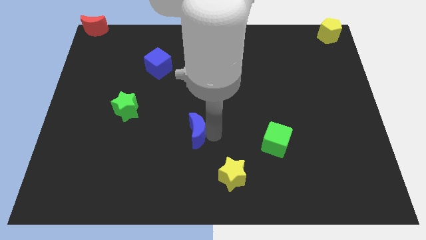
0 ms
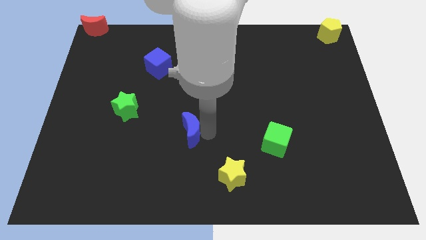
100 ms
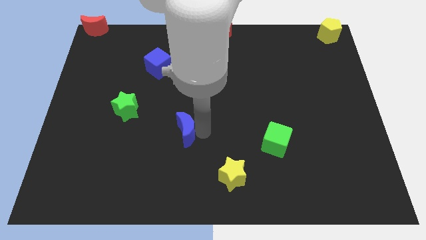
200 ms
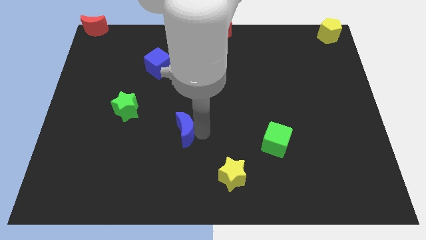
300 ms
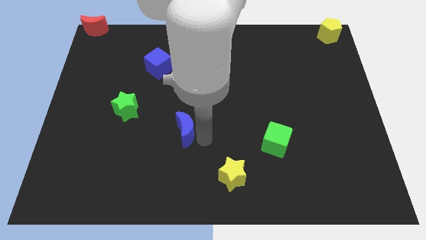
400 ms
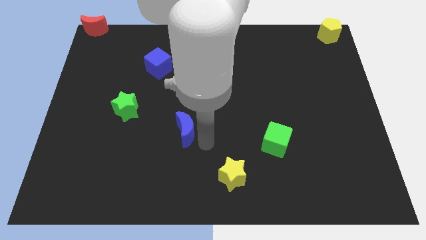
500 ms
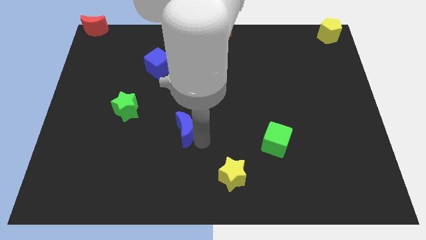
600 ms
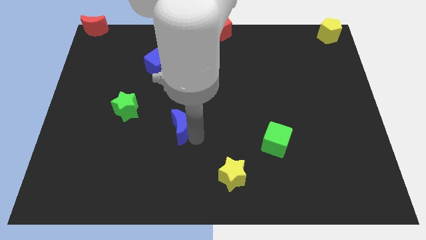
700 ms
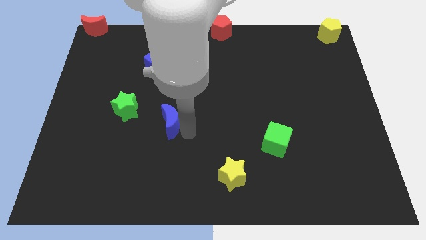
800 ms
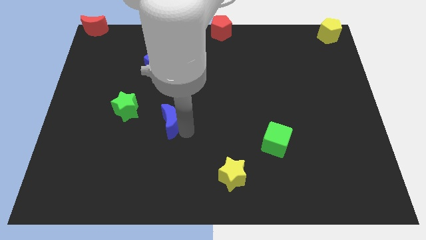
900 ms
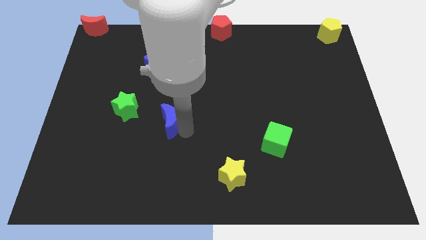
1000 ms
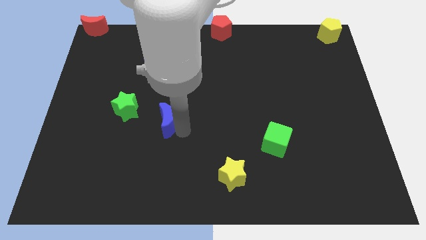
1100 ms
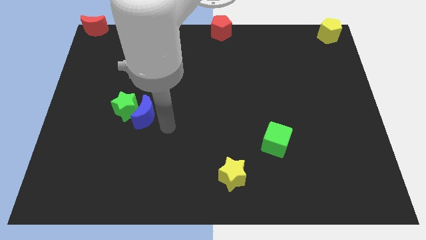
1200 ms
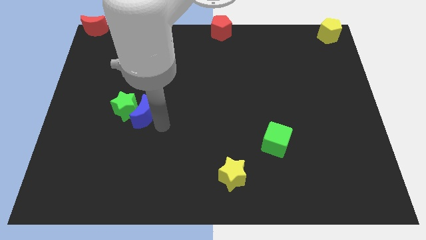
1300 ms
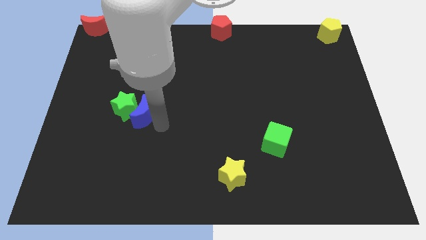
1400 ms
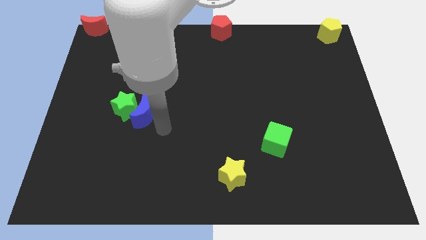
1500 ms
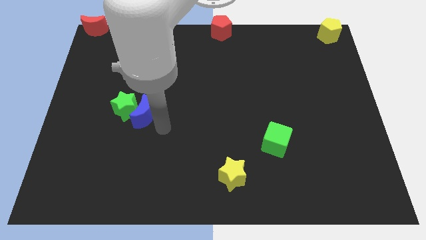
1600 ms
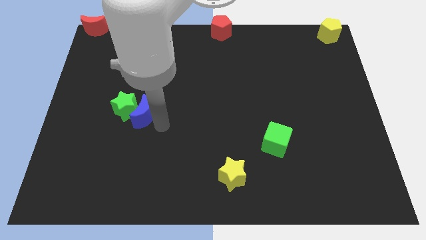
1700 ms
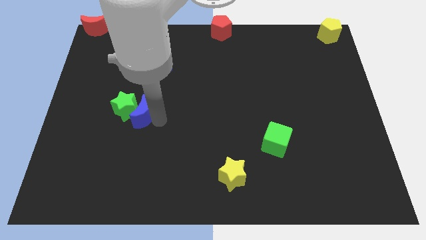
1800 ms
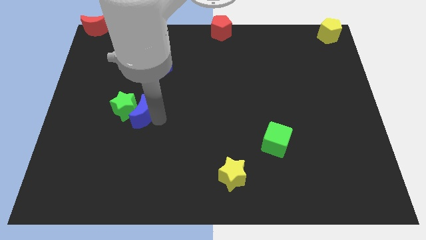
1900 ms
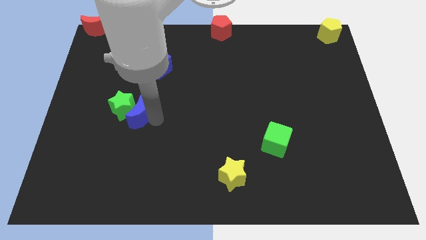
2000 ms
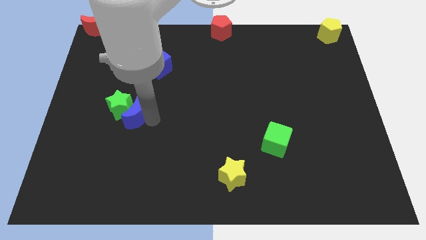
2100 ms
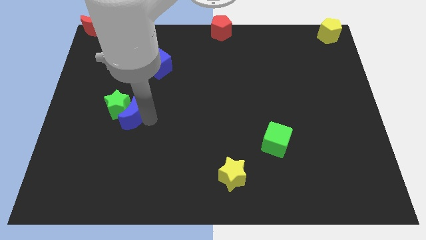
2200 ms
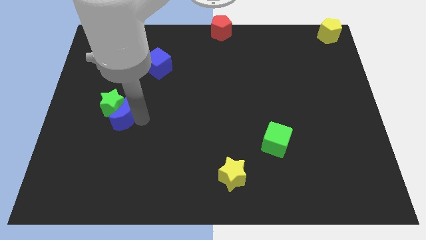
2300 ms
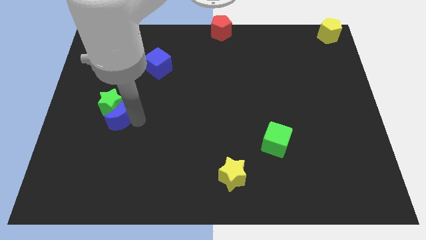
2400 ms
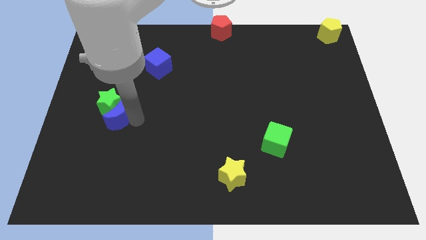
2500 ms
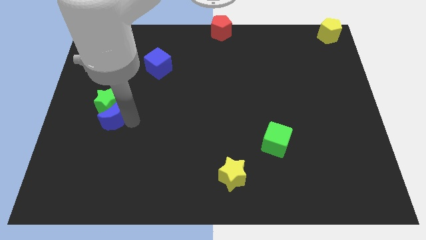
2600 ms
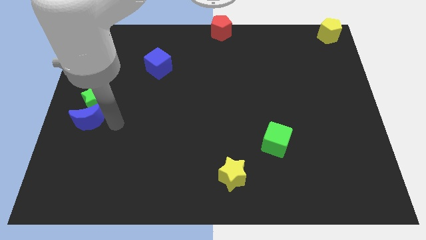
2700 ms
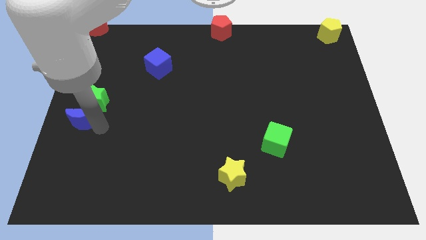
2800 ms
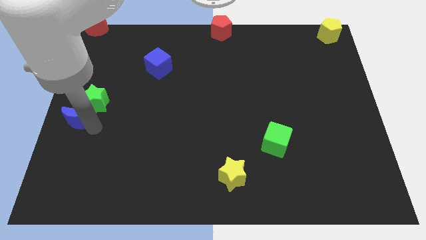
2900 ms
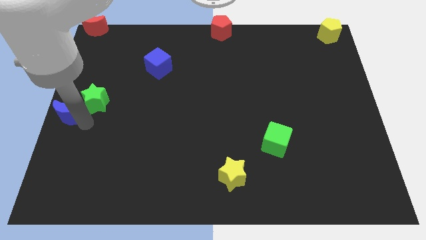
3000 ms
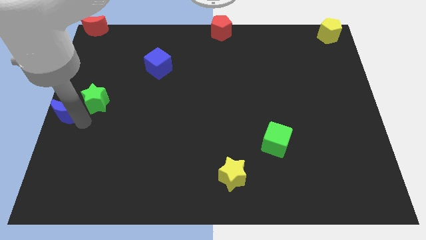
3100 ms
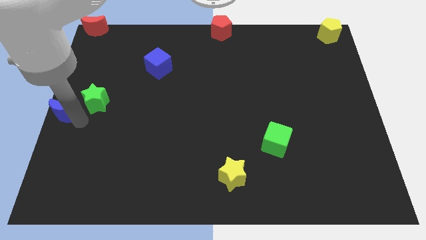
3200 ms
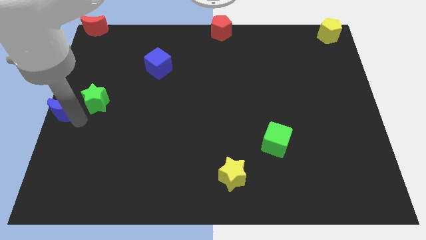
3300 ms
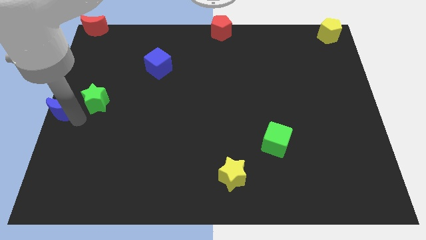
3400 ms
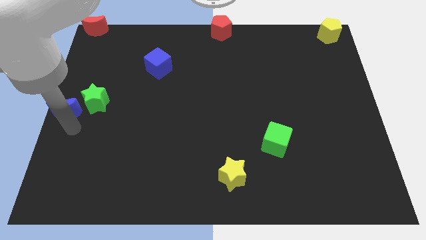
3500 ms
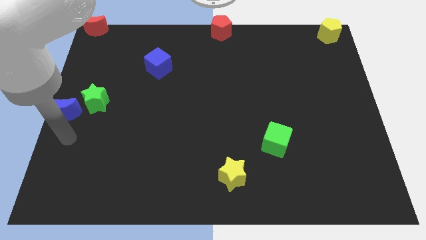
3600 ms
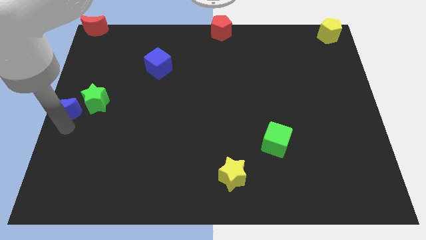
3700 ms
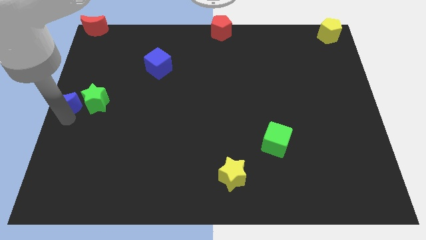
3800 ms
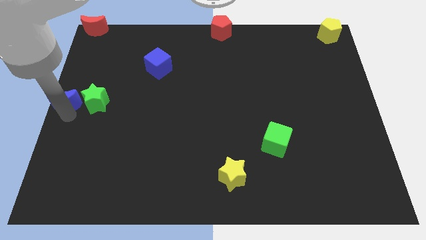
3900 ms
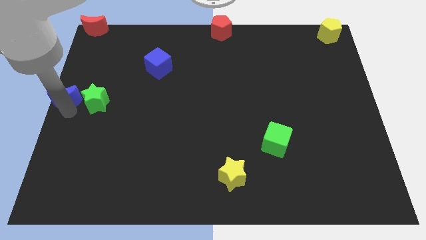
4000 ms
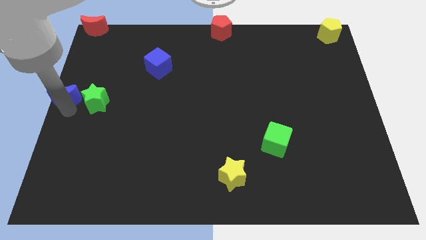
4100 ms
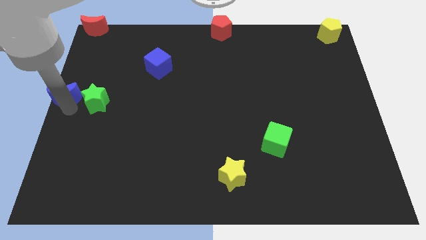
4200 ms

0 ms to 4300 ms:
place blue moon to the left of green star

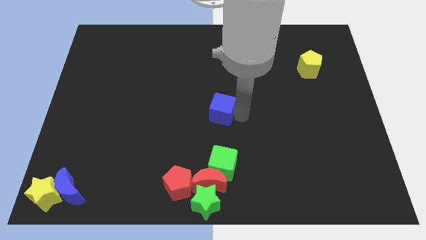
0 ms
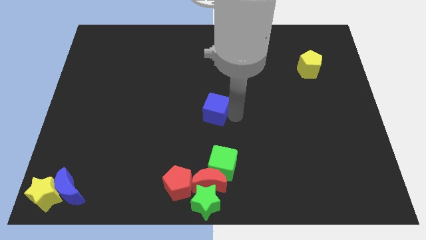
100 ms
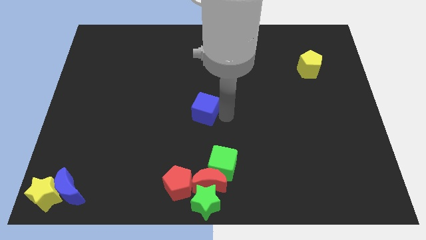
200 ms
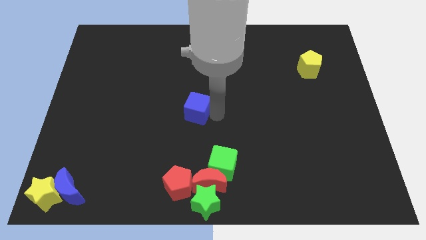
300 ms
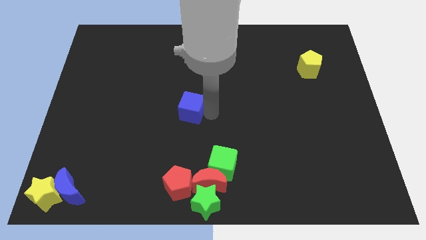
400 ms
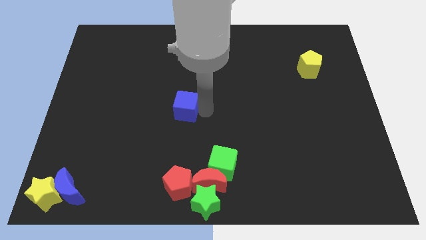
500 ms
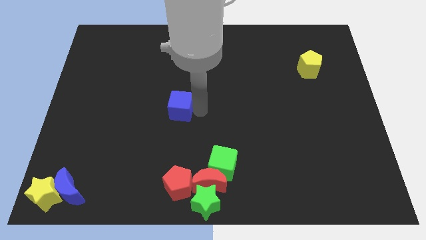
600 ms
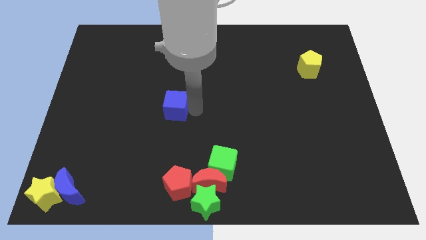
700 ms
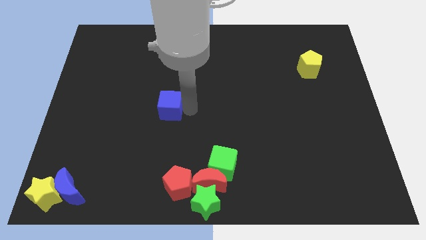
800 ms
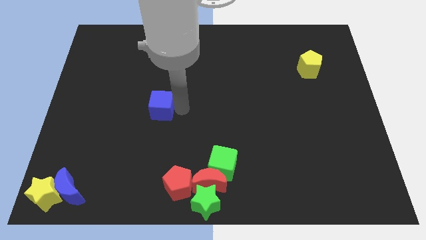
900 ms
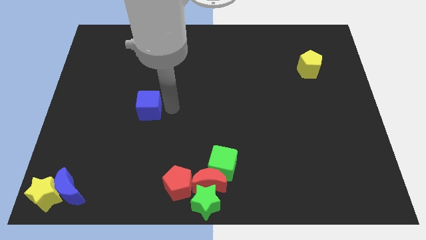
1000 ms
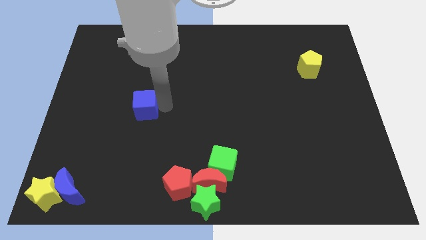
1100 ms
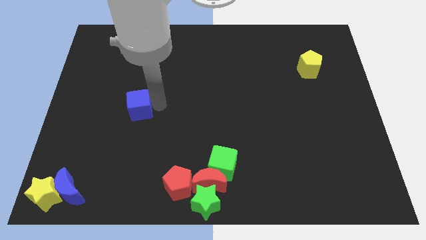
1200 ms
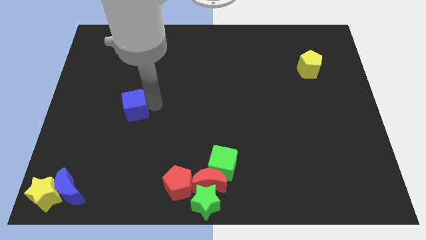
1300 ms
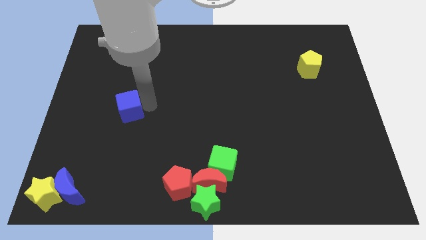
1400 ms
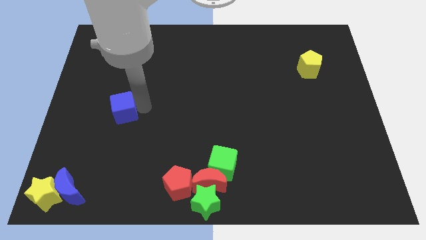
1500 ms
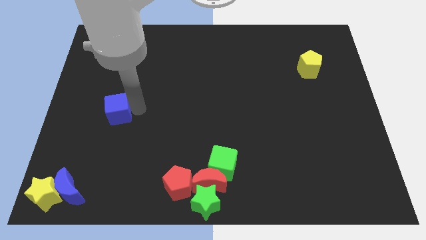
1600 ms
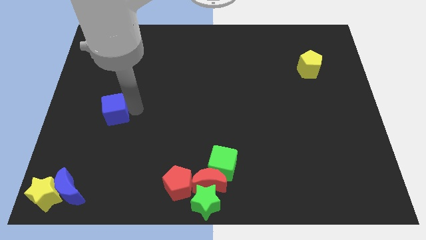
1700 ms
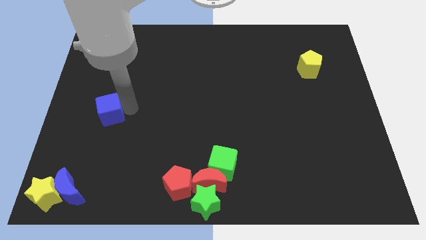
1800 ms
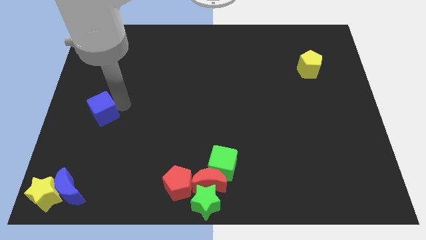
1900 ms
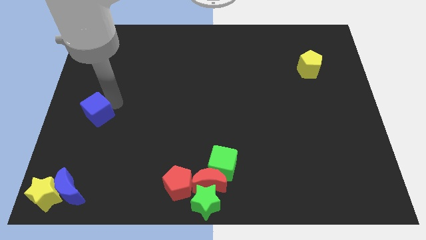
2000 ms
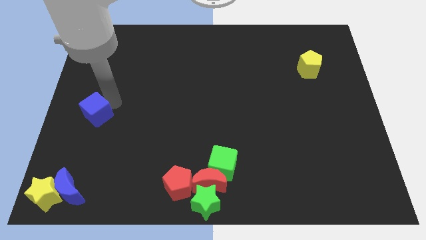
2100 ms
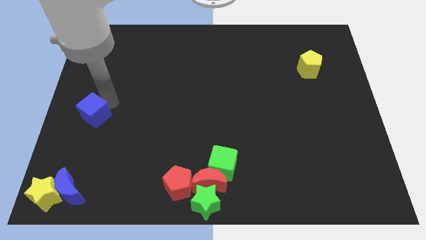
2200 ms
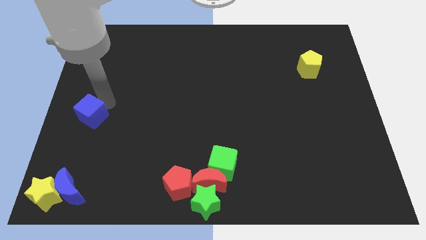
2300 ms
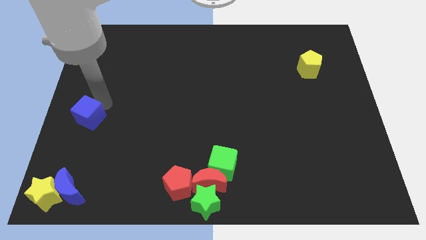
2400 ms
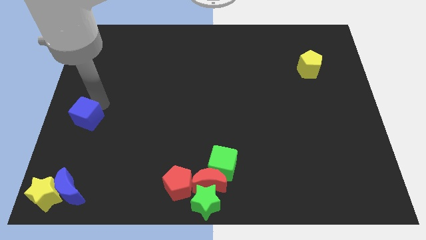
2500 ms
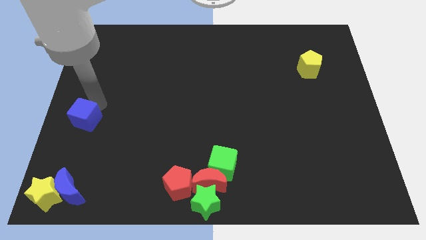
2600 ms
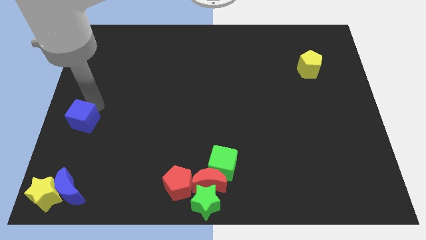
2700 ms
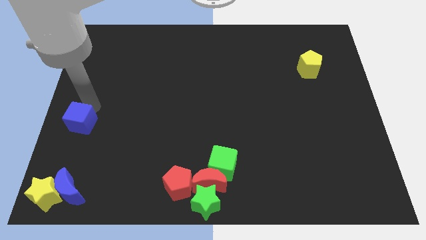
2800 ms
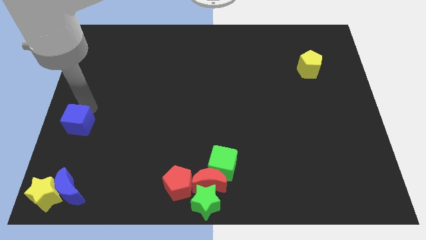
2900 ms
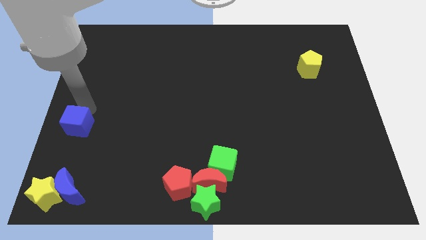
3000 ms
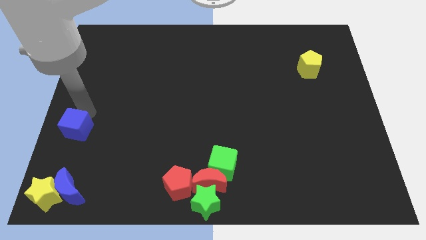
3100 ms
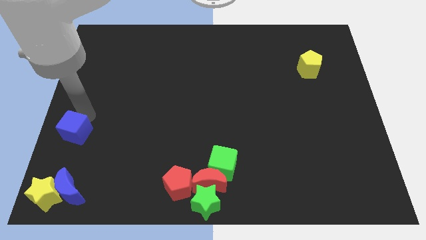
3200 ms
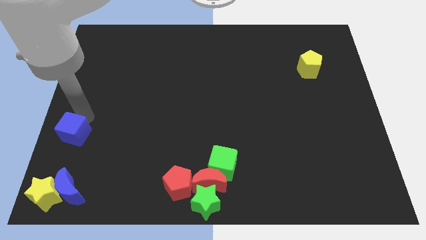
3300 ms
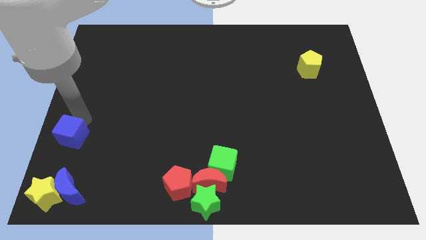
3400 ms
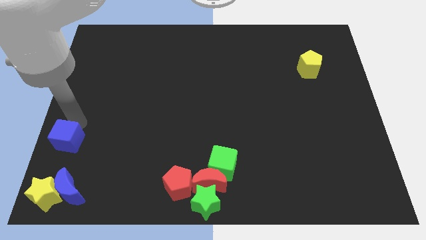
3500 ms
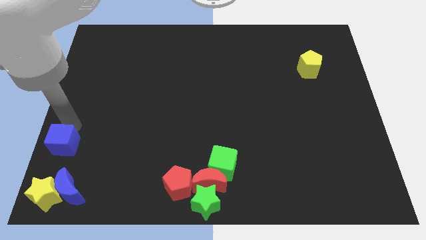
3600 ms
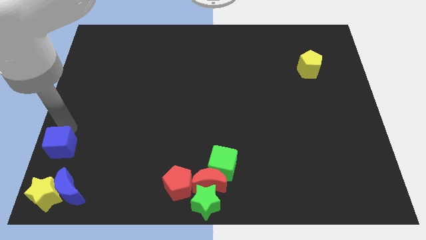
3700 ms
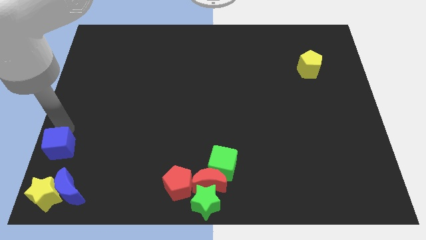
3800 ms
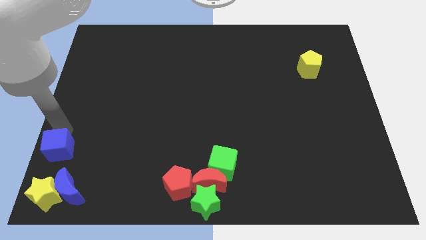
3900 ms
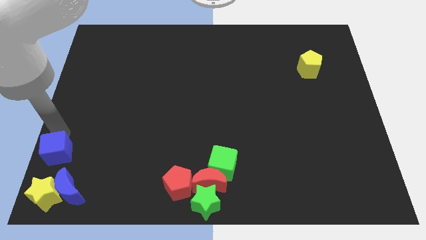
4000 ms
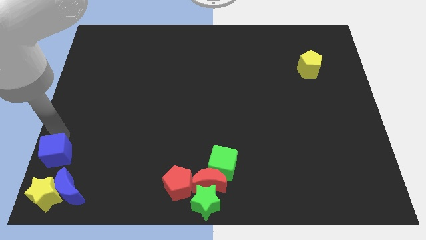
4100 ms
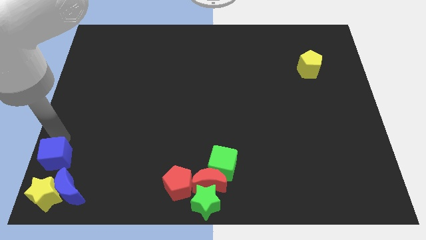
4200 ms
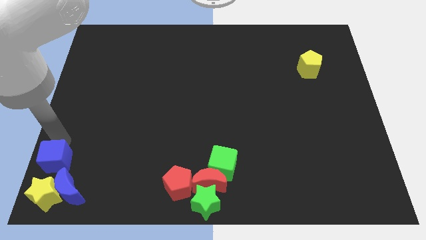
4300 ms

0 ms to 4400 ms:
push the blue cube to the top of the yellow star

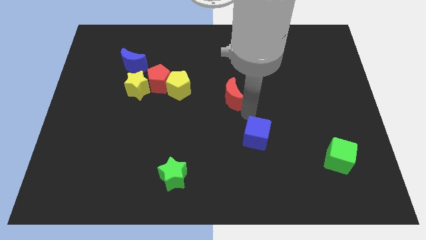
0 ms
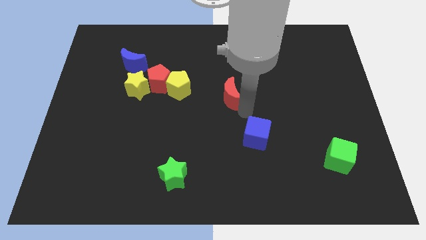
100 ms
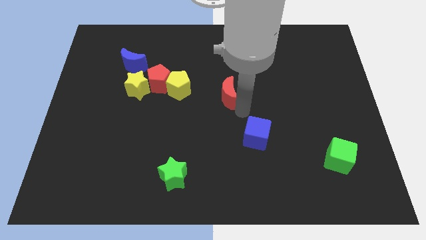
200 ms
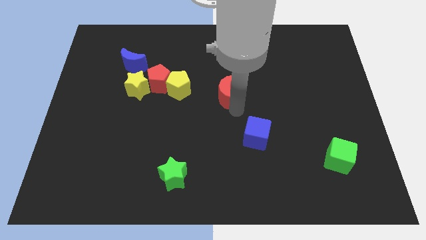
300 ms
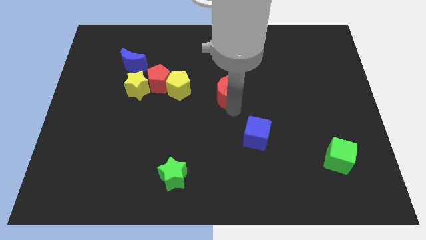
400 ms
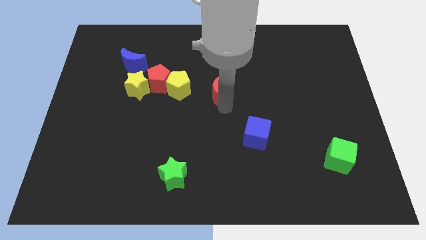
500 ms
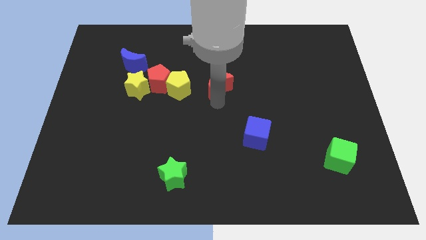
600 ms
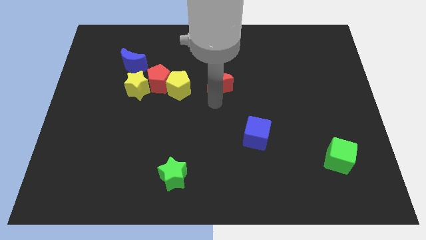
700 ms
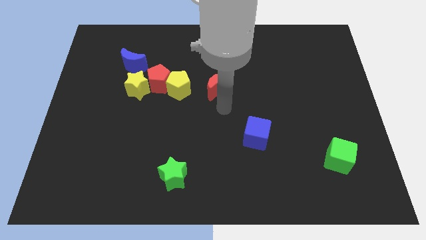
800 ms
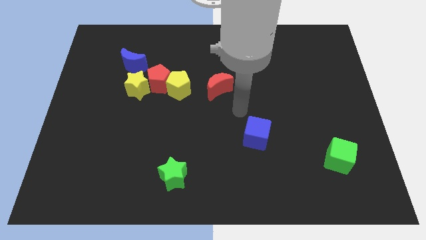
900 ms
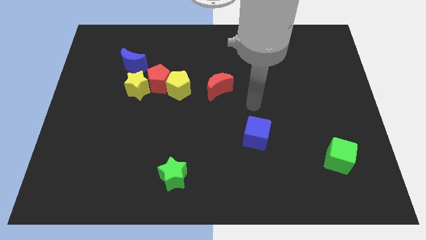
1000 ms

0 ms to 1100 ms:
slide red moon towards center
